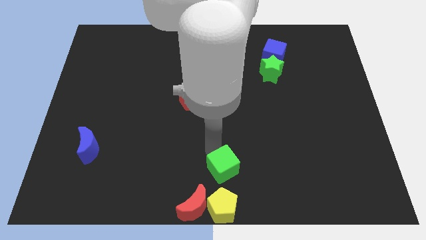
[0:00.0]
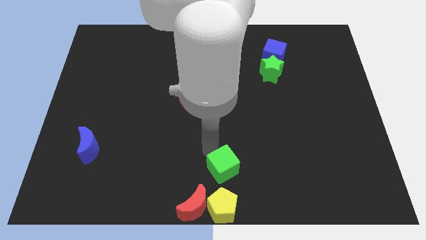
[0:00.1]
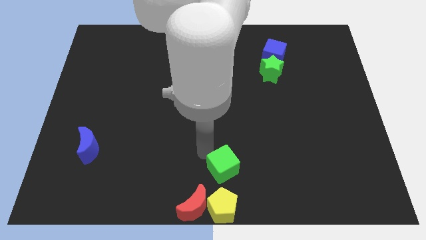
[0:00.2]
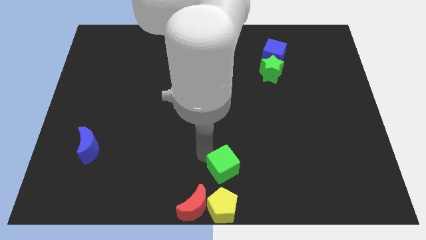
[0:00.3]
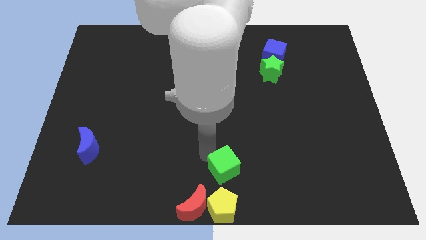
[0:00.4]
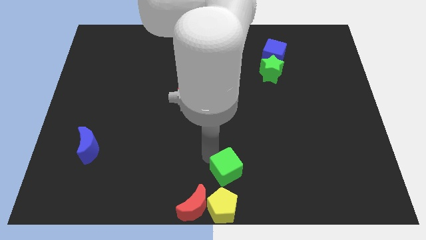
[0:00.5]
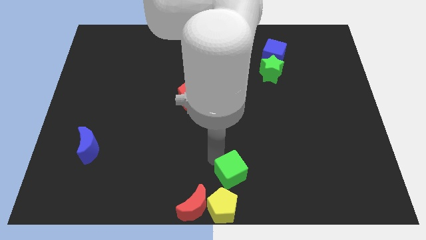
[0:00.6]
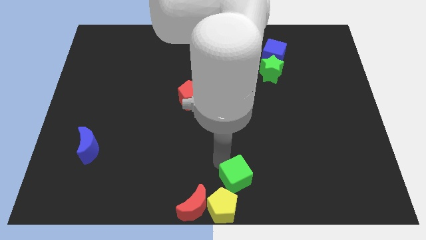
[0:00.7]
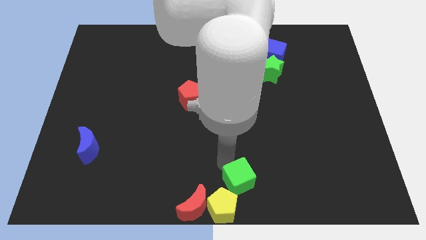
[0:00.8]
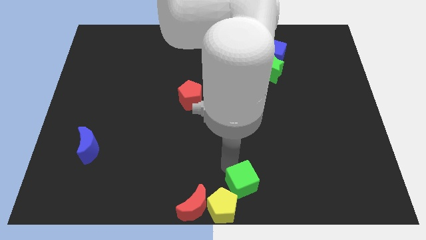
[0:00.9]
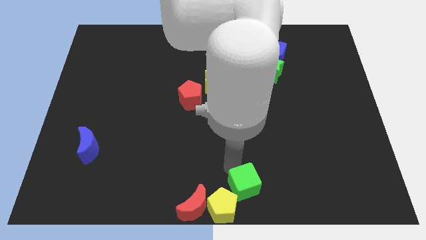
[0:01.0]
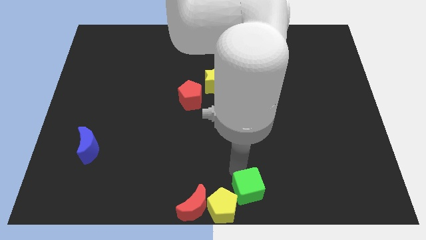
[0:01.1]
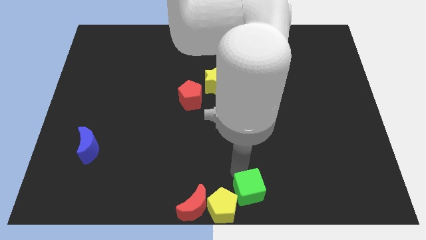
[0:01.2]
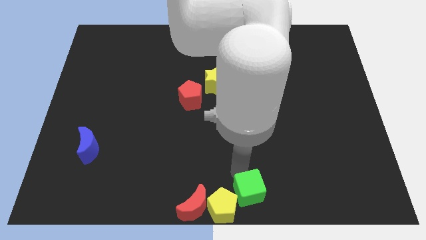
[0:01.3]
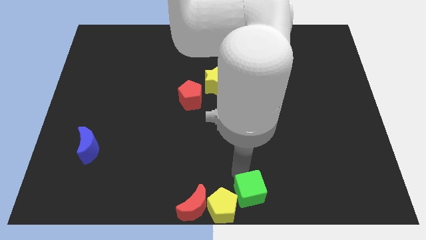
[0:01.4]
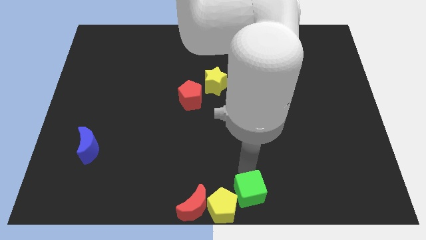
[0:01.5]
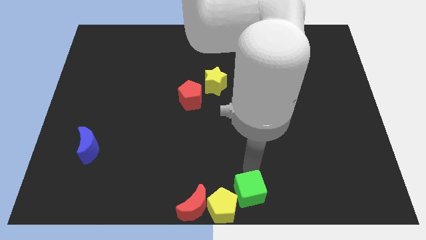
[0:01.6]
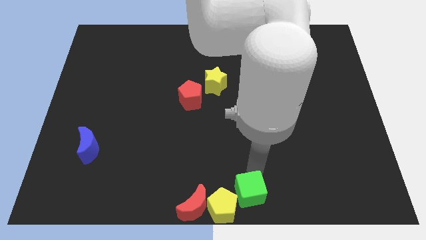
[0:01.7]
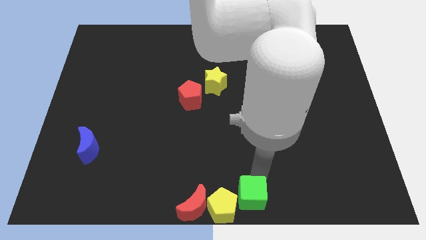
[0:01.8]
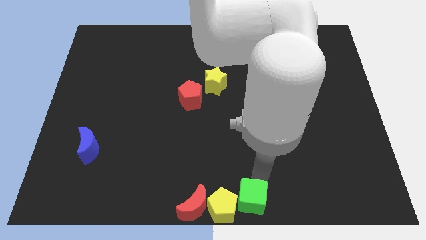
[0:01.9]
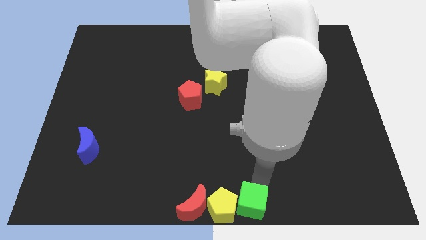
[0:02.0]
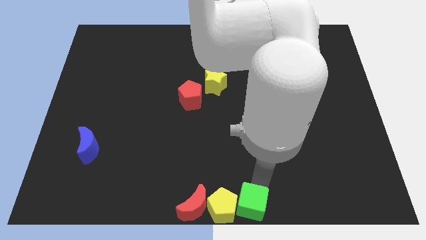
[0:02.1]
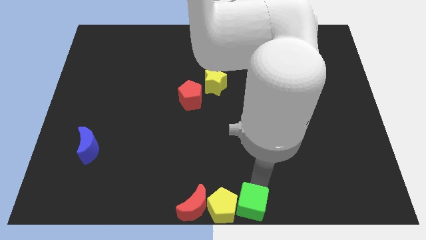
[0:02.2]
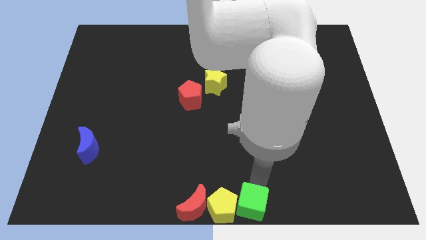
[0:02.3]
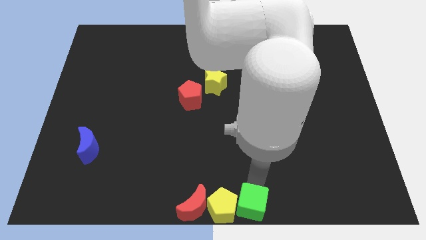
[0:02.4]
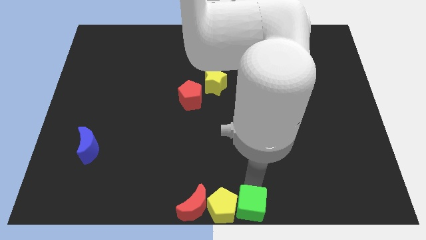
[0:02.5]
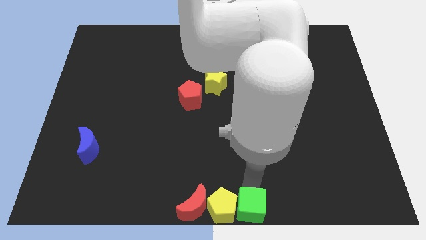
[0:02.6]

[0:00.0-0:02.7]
place green cube adjacent to yellow pentagon

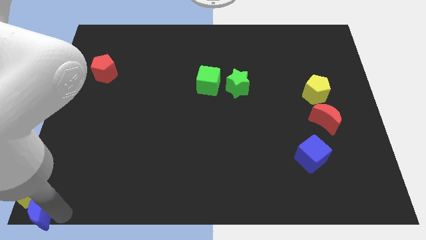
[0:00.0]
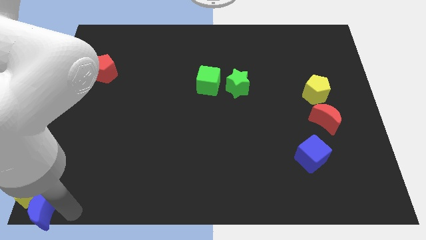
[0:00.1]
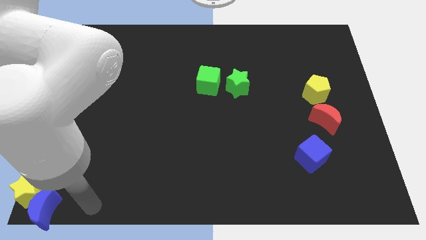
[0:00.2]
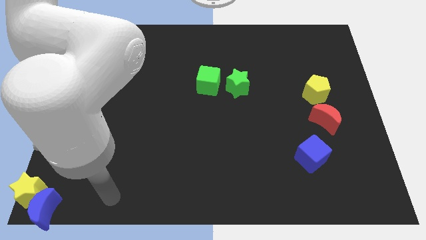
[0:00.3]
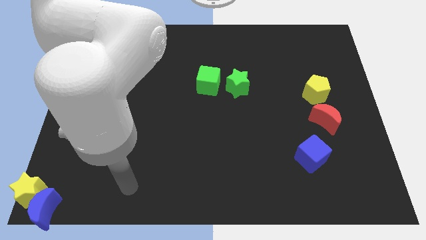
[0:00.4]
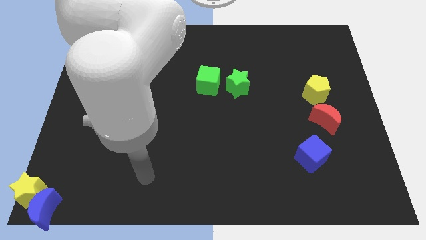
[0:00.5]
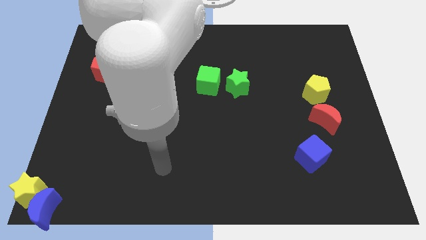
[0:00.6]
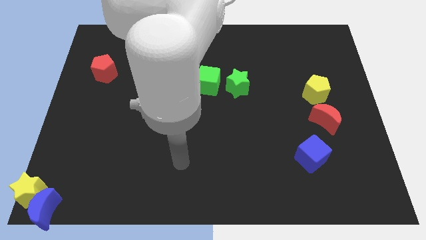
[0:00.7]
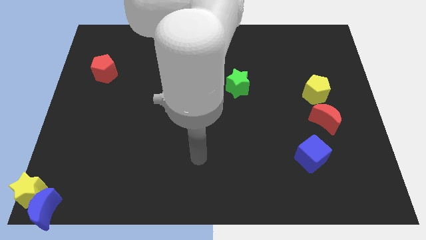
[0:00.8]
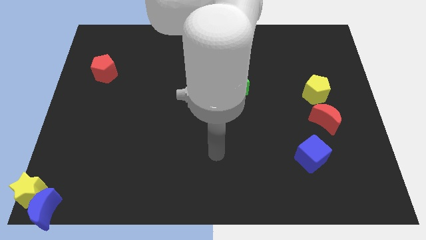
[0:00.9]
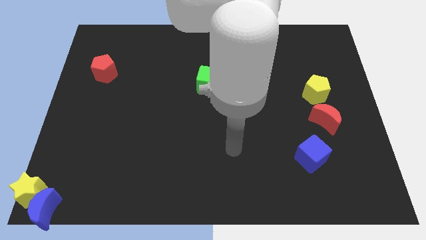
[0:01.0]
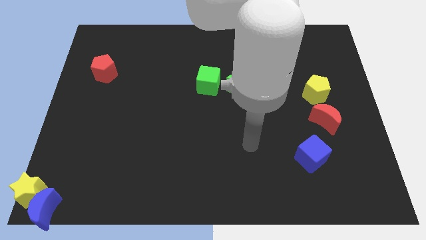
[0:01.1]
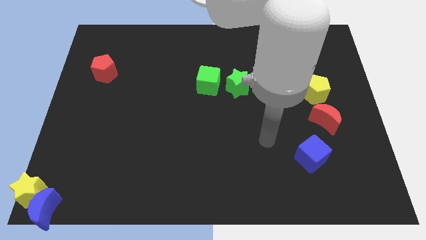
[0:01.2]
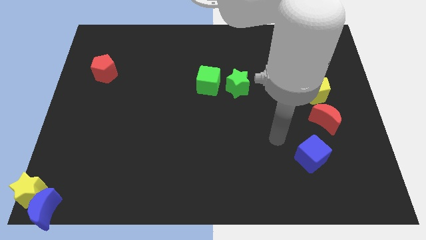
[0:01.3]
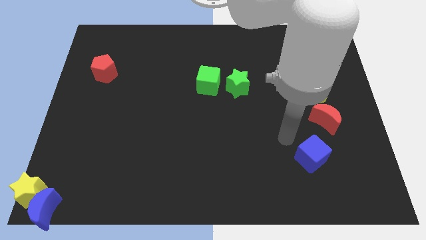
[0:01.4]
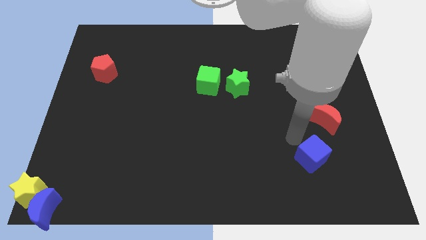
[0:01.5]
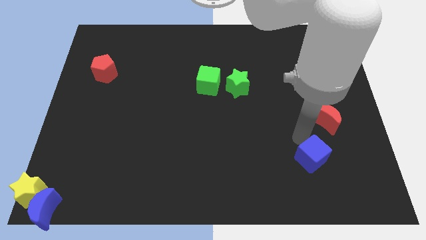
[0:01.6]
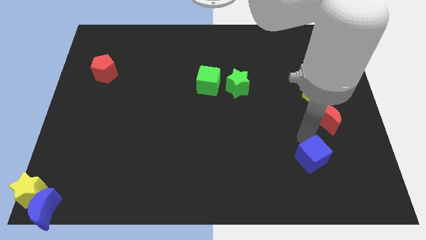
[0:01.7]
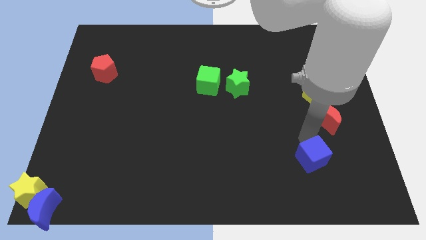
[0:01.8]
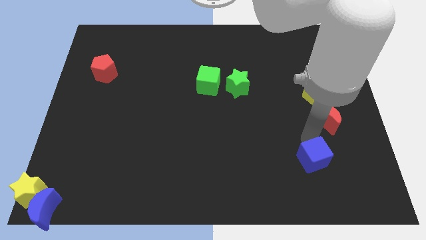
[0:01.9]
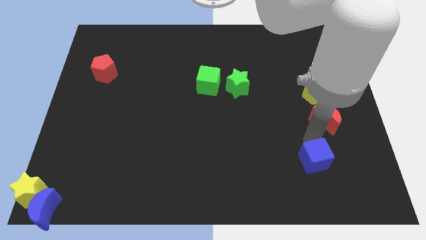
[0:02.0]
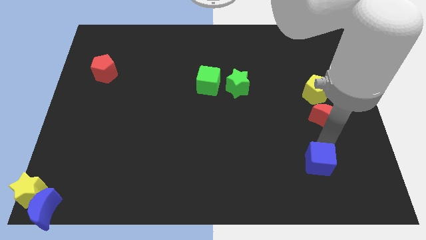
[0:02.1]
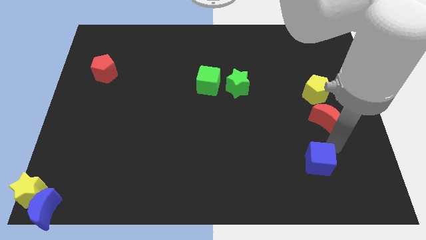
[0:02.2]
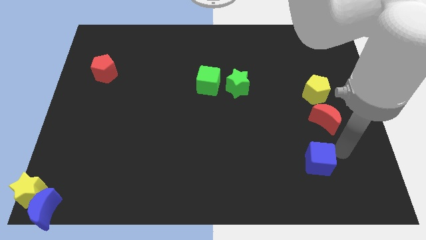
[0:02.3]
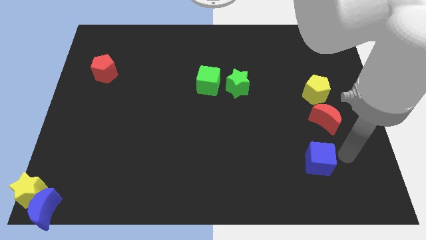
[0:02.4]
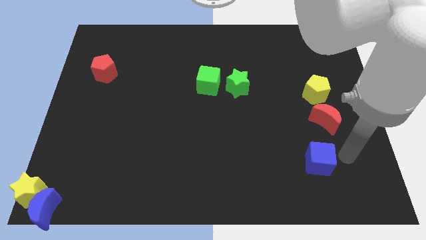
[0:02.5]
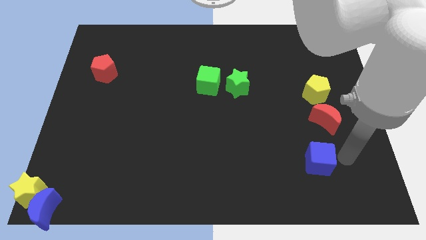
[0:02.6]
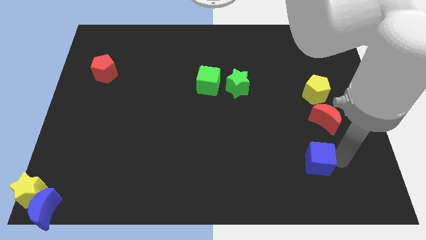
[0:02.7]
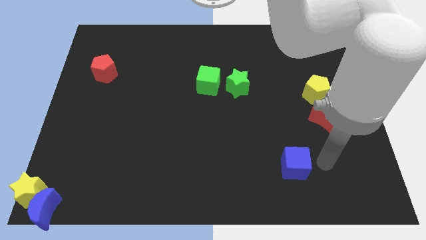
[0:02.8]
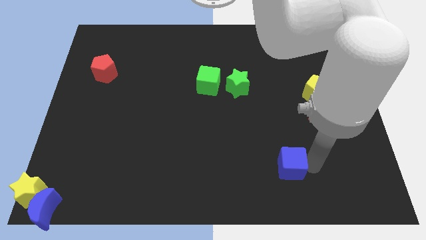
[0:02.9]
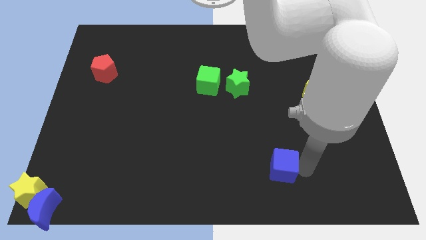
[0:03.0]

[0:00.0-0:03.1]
push the blue cube to the bottom left of the red crescent

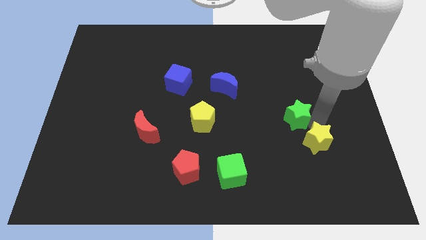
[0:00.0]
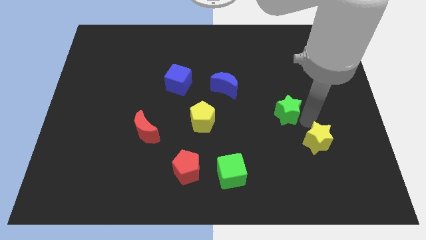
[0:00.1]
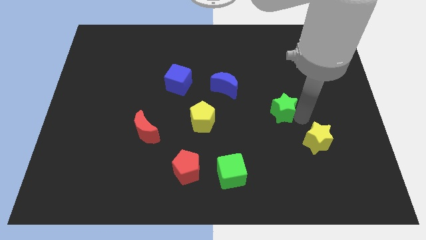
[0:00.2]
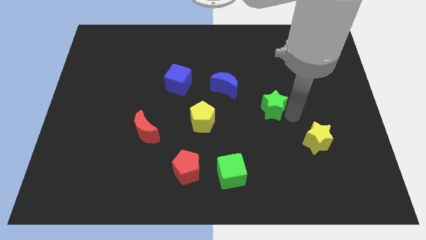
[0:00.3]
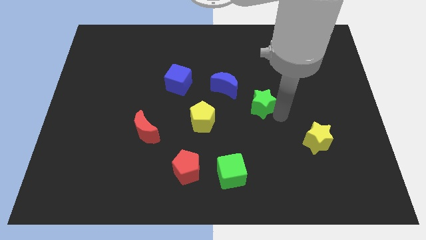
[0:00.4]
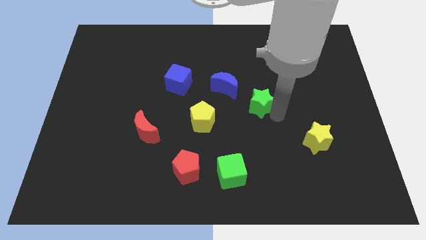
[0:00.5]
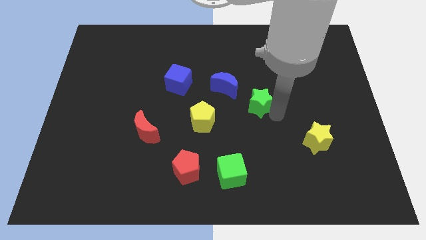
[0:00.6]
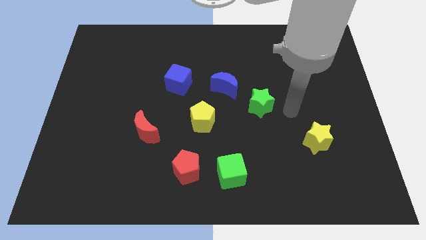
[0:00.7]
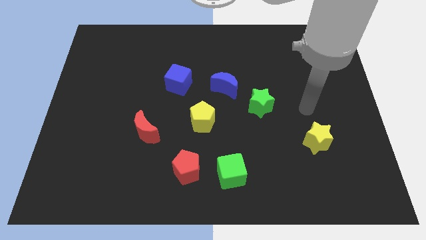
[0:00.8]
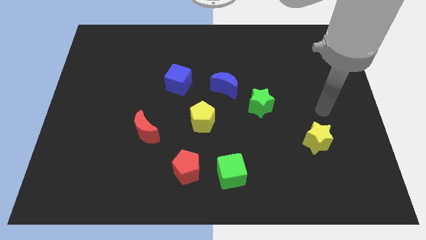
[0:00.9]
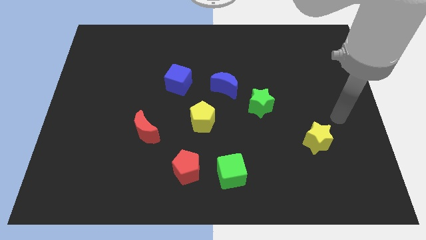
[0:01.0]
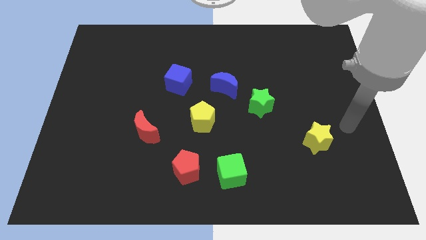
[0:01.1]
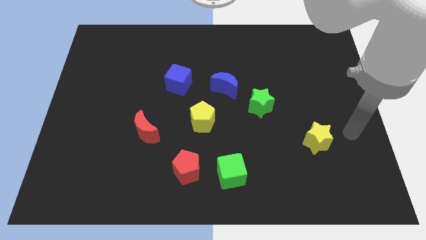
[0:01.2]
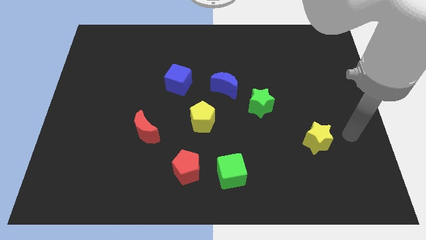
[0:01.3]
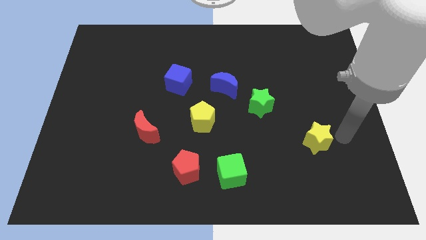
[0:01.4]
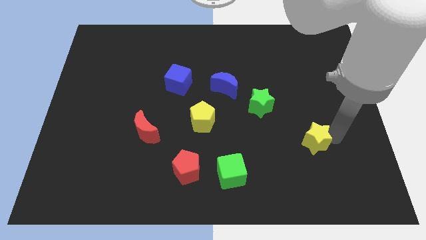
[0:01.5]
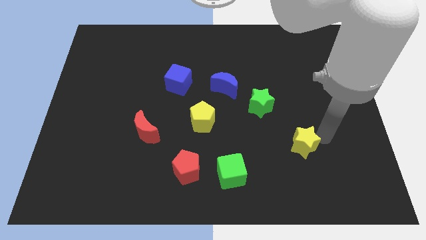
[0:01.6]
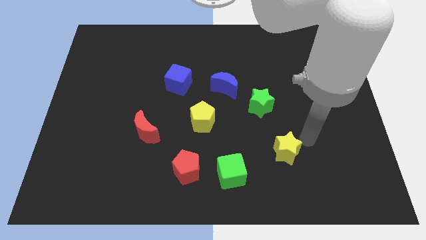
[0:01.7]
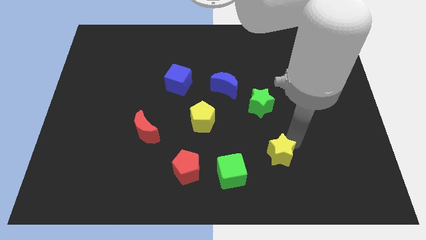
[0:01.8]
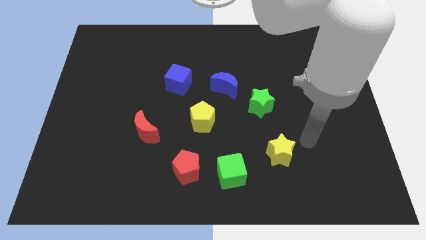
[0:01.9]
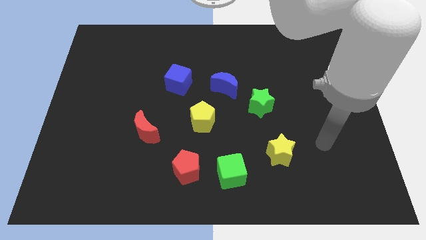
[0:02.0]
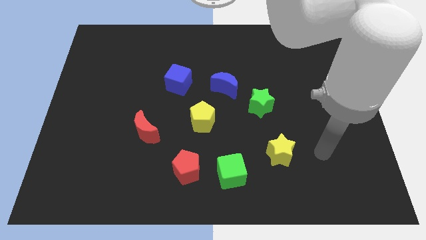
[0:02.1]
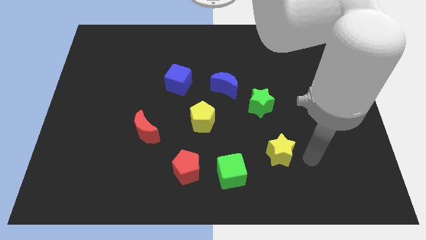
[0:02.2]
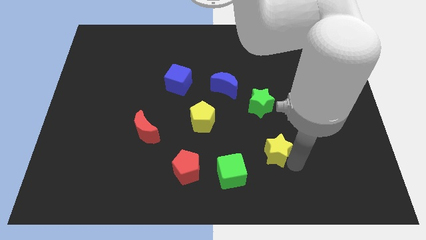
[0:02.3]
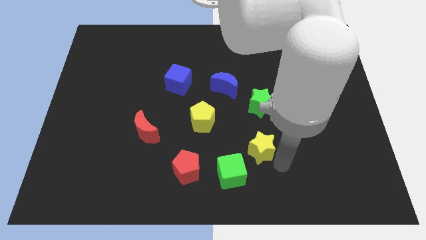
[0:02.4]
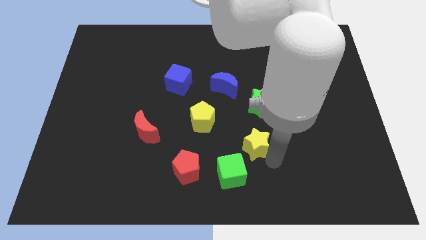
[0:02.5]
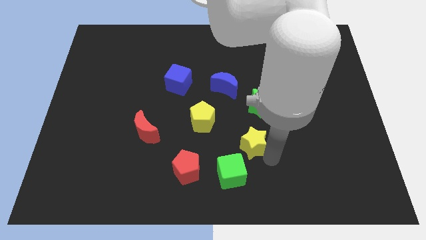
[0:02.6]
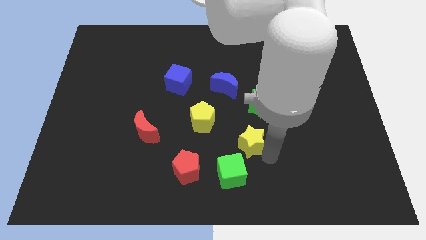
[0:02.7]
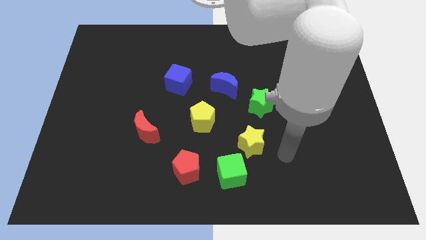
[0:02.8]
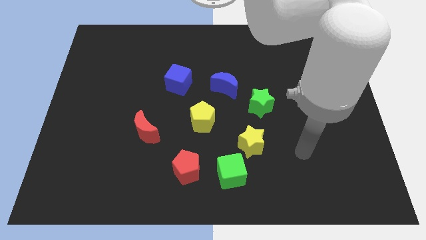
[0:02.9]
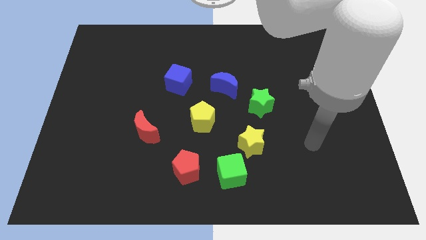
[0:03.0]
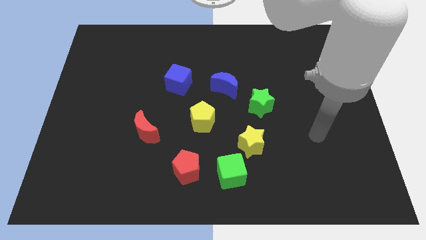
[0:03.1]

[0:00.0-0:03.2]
place the yellow star bottom left to the green star

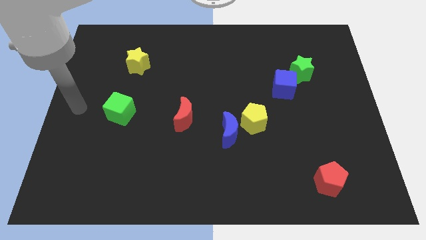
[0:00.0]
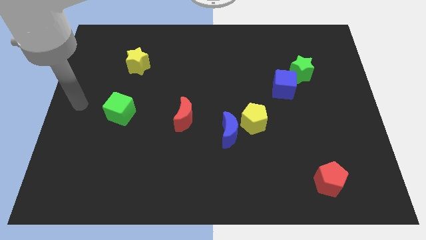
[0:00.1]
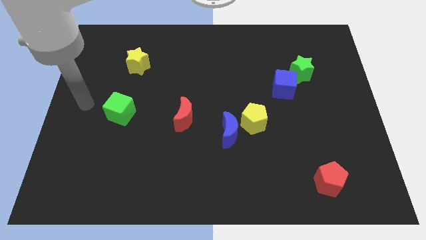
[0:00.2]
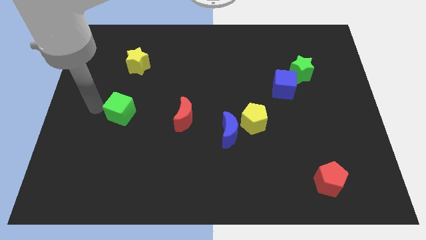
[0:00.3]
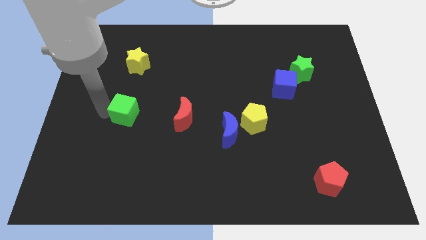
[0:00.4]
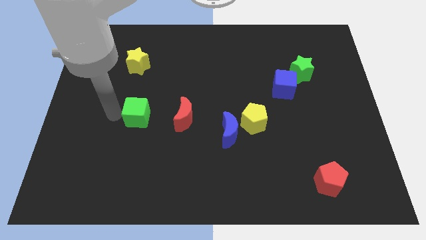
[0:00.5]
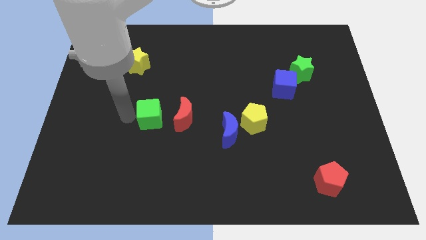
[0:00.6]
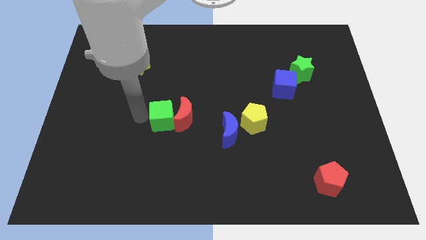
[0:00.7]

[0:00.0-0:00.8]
place the green cube to the left side of red moon
